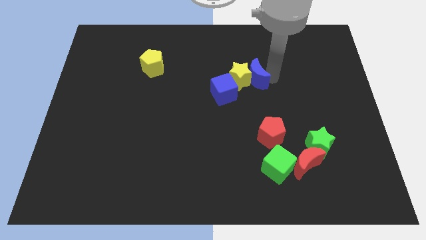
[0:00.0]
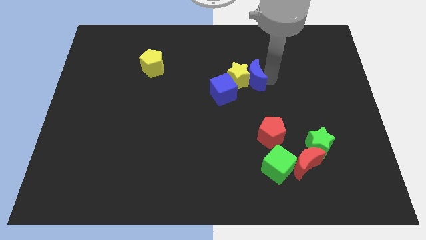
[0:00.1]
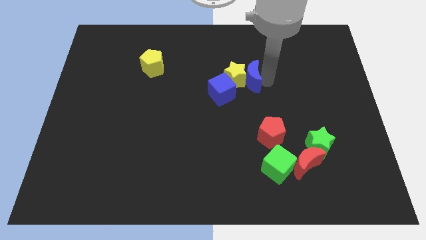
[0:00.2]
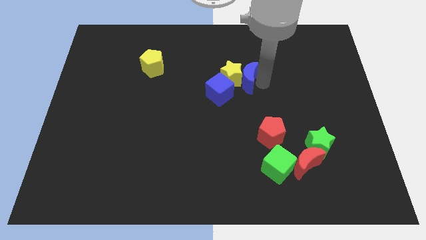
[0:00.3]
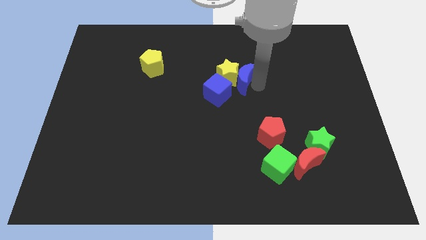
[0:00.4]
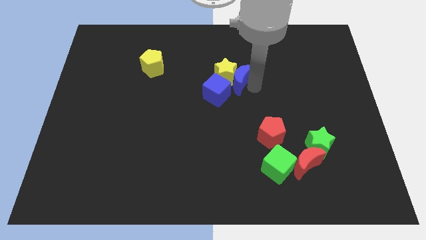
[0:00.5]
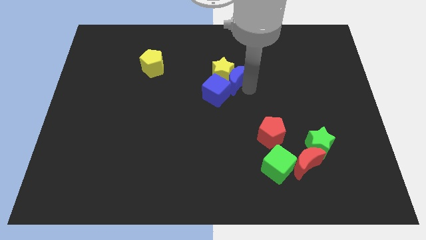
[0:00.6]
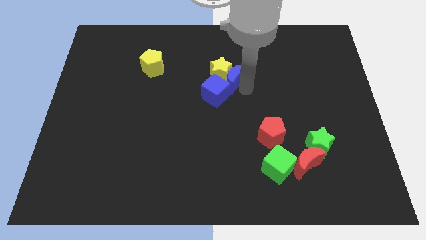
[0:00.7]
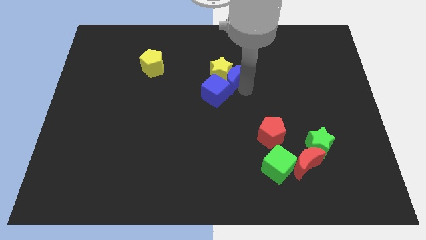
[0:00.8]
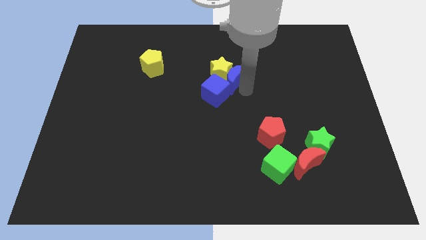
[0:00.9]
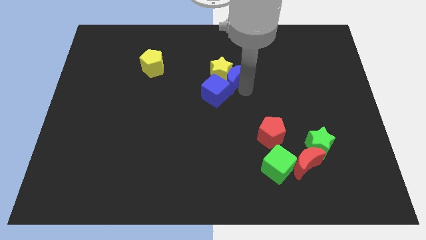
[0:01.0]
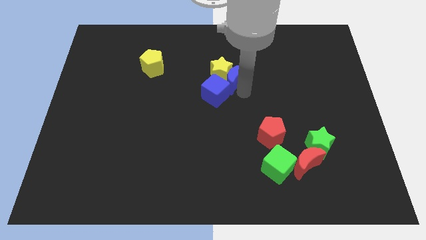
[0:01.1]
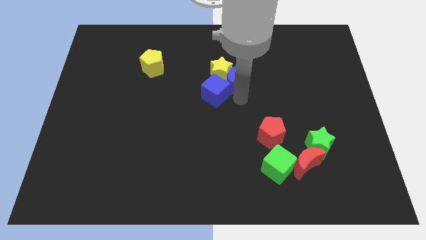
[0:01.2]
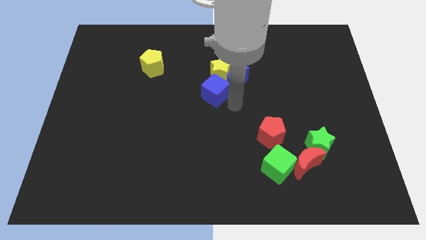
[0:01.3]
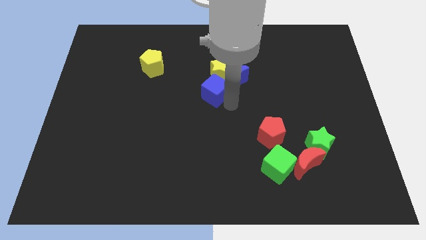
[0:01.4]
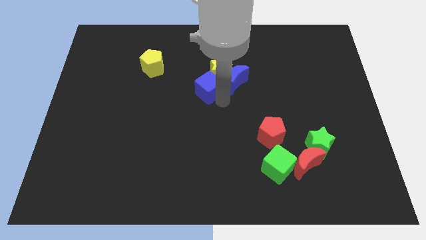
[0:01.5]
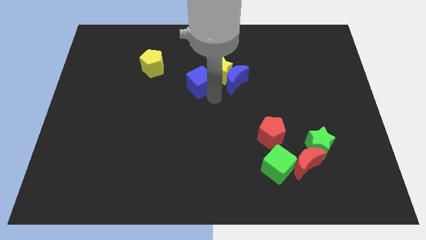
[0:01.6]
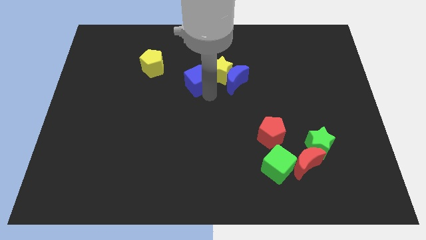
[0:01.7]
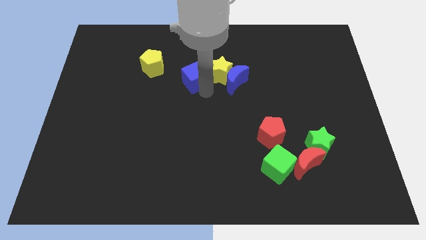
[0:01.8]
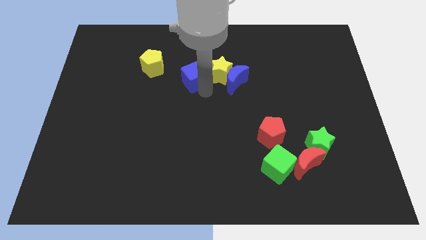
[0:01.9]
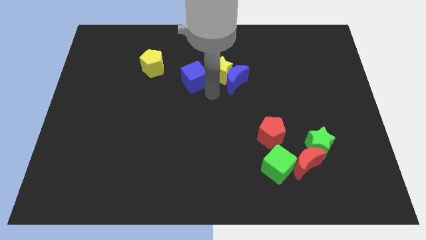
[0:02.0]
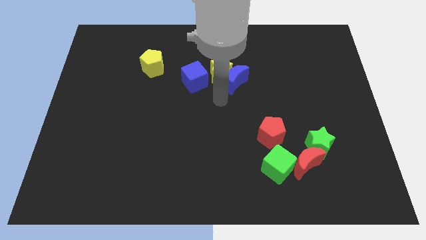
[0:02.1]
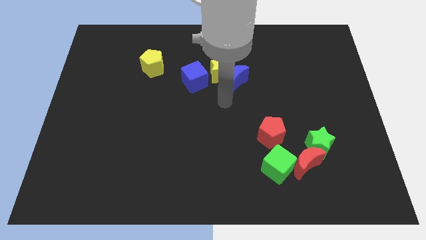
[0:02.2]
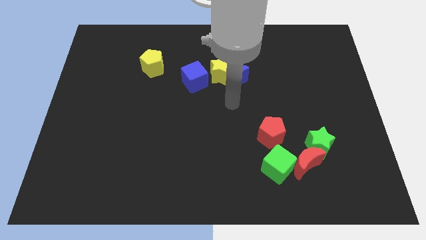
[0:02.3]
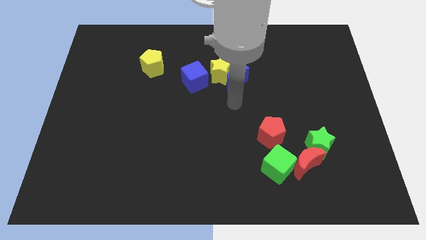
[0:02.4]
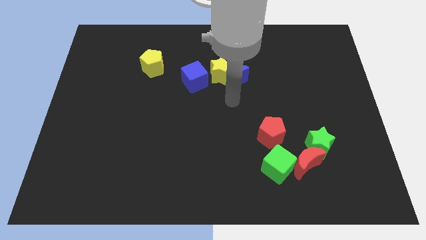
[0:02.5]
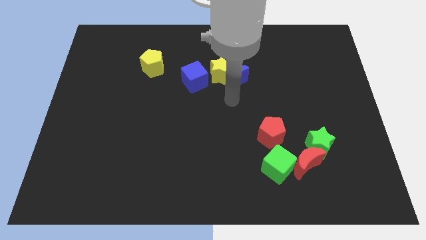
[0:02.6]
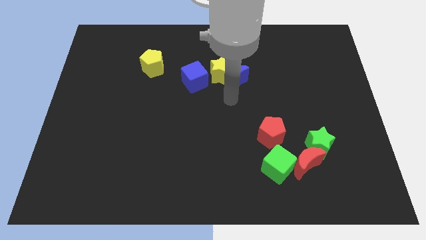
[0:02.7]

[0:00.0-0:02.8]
push the blue crescent into the blue cube and yellow star from the right side

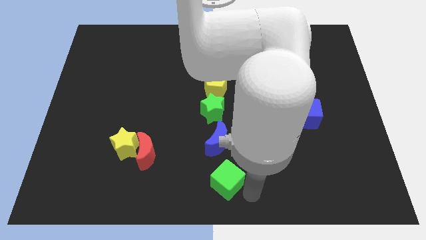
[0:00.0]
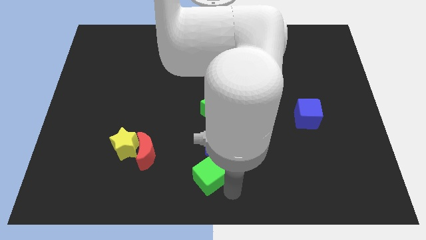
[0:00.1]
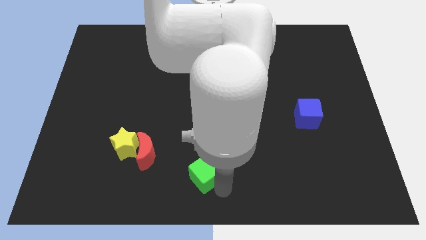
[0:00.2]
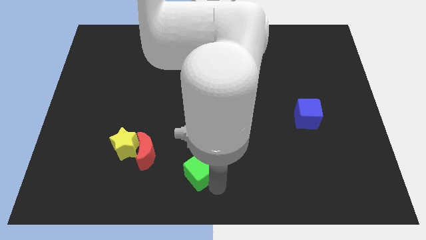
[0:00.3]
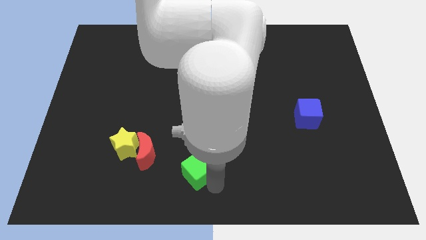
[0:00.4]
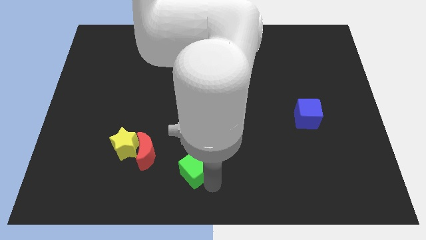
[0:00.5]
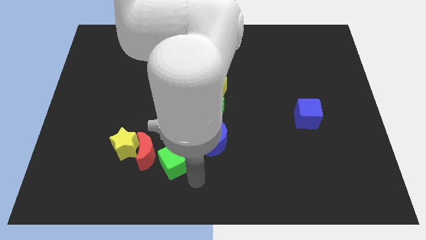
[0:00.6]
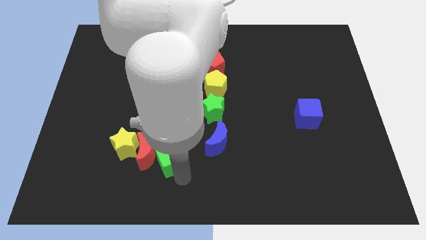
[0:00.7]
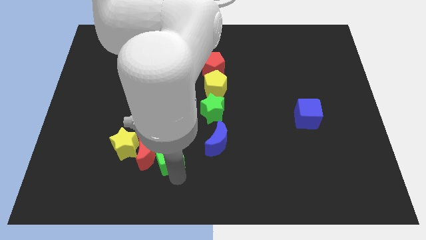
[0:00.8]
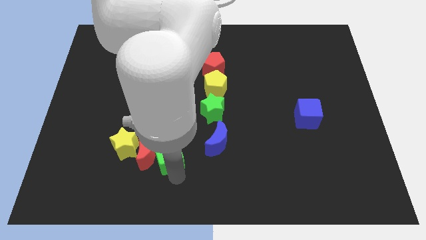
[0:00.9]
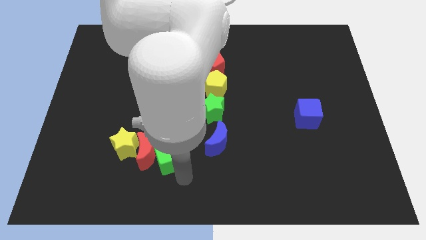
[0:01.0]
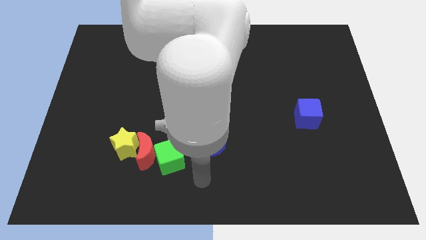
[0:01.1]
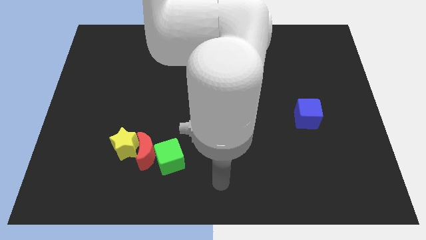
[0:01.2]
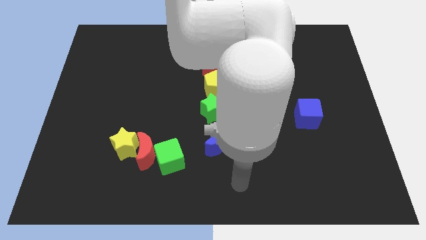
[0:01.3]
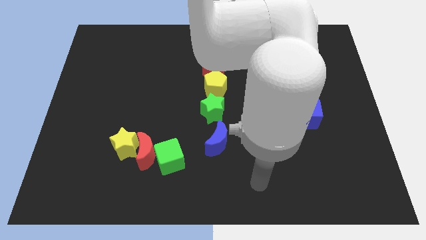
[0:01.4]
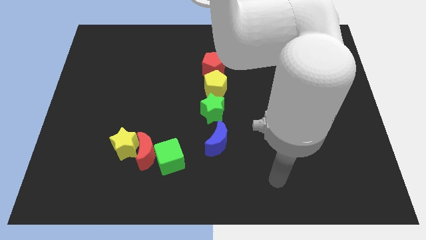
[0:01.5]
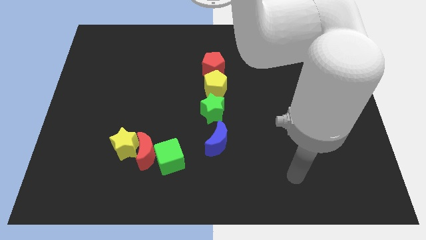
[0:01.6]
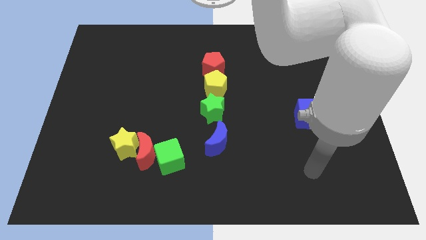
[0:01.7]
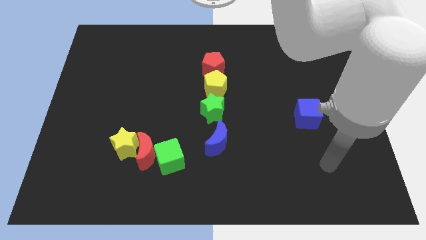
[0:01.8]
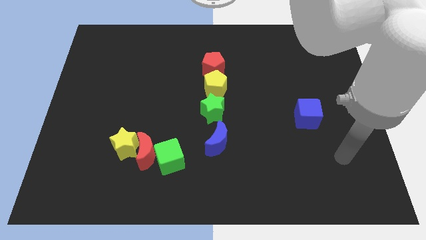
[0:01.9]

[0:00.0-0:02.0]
push the green cube diagonally bottom left to the blue moon

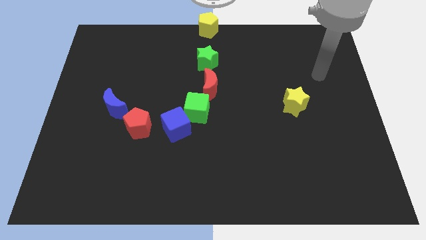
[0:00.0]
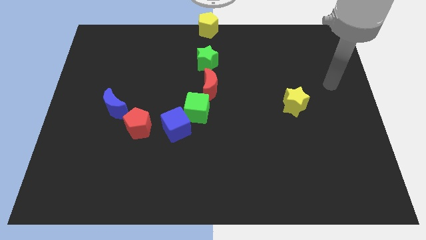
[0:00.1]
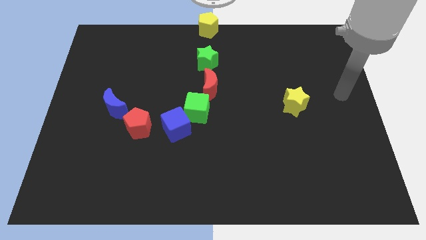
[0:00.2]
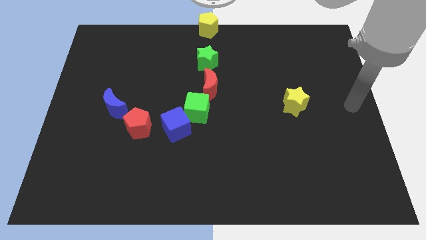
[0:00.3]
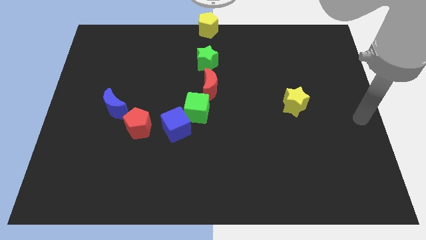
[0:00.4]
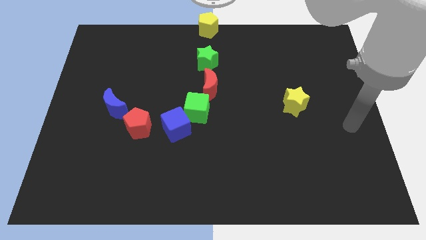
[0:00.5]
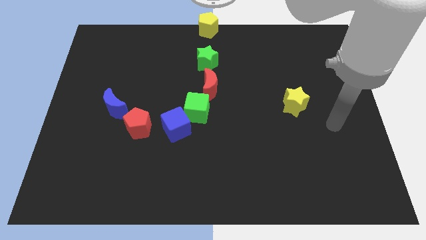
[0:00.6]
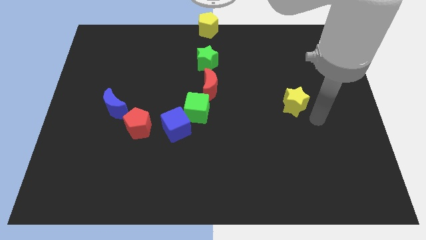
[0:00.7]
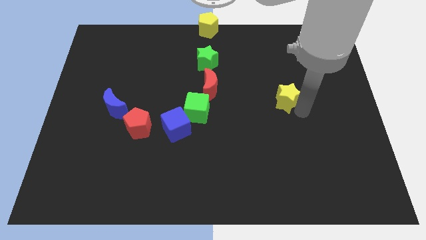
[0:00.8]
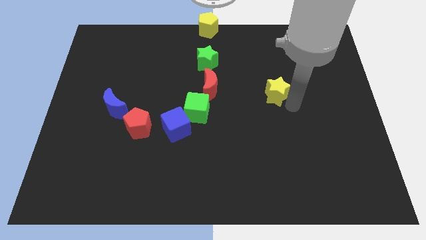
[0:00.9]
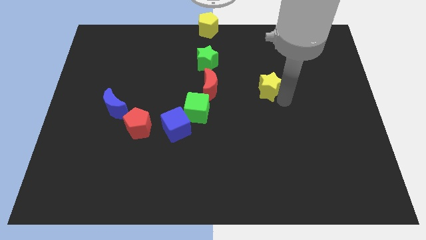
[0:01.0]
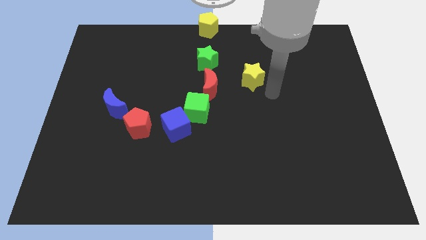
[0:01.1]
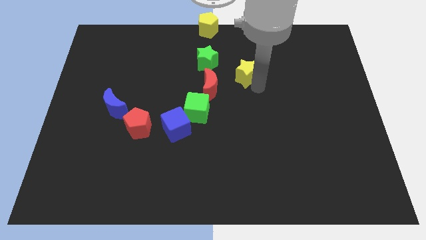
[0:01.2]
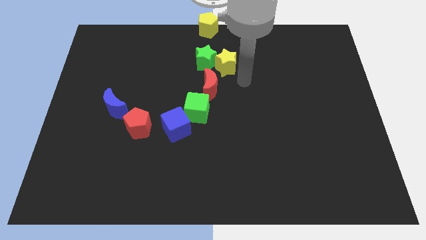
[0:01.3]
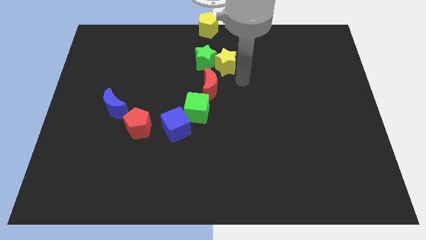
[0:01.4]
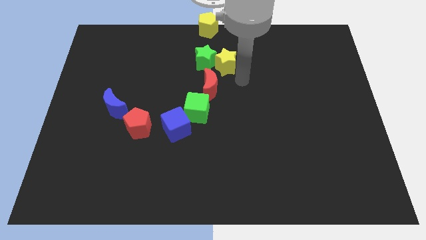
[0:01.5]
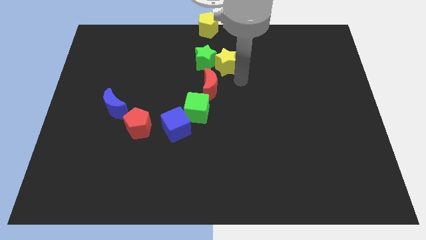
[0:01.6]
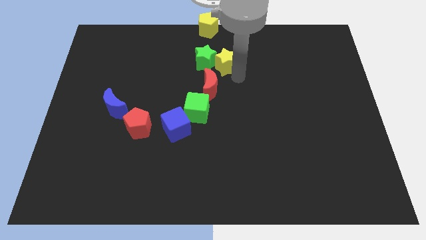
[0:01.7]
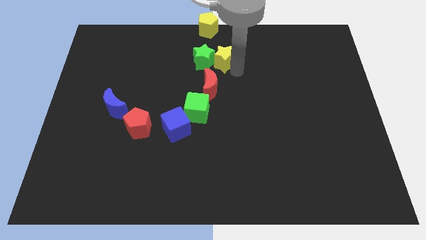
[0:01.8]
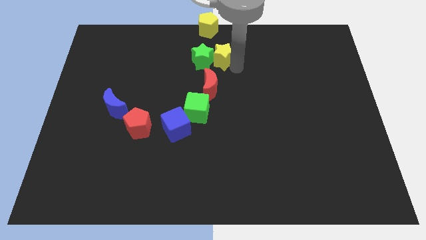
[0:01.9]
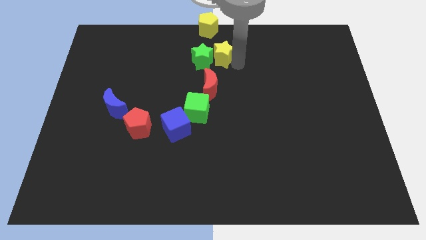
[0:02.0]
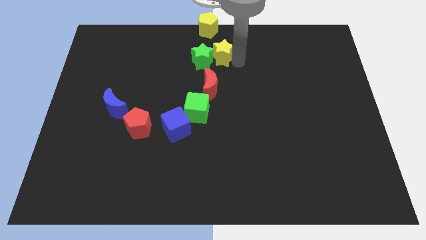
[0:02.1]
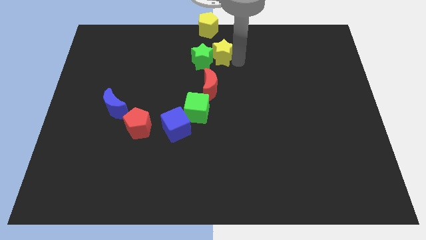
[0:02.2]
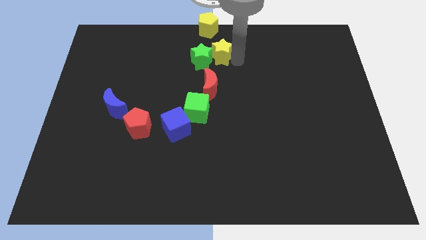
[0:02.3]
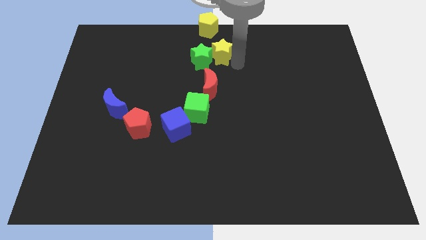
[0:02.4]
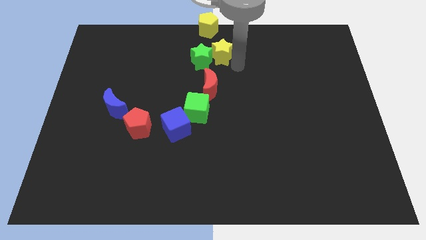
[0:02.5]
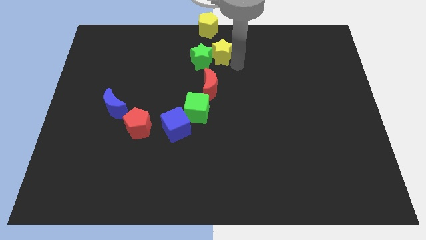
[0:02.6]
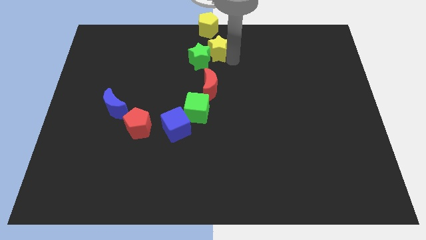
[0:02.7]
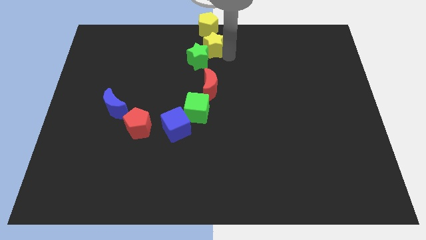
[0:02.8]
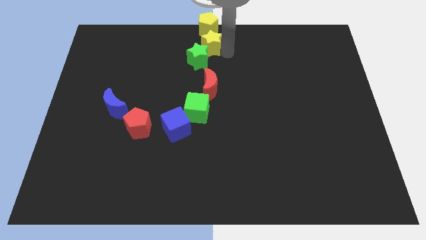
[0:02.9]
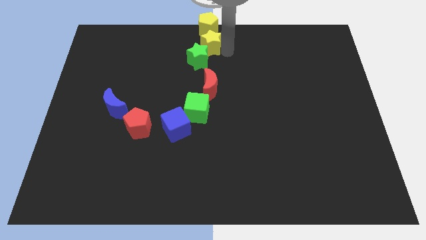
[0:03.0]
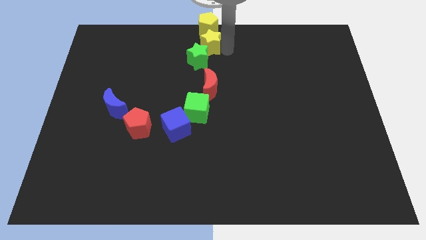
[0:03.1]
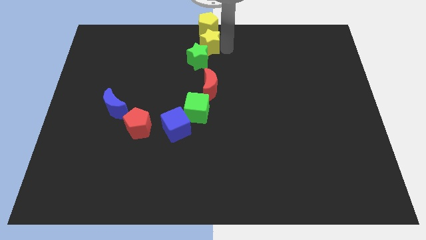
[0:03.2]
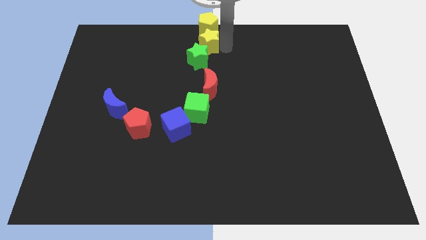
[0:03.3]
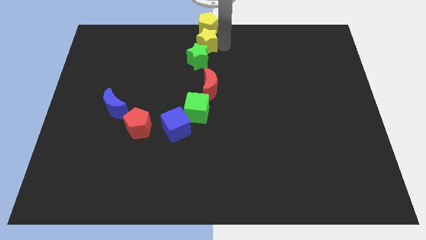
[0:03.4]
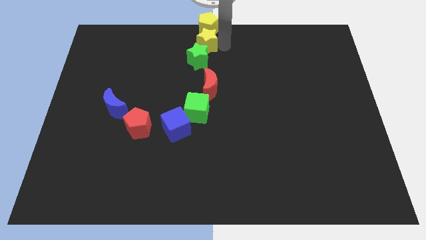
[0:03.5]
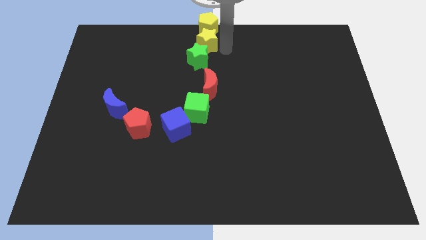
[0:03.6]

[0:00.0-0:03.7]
push the yellow star below the yellow pentagon

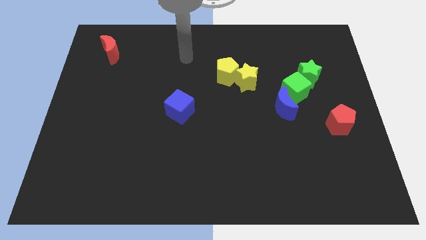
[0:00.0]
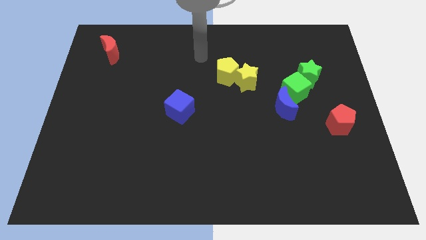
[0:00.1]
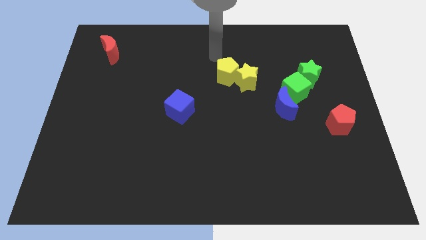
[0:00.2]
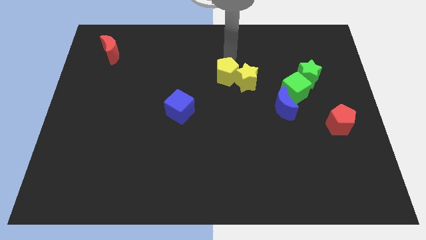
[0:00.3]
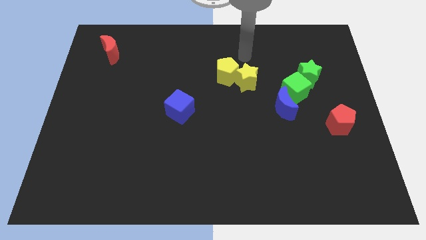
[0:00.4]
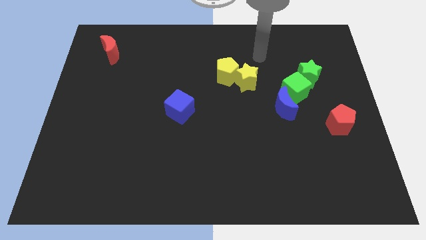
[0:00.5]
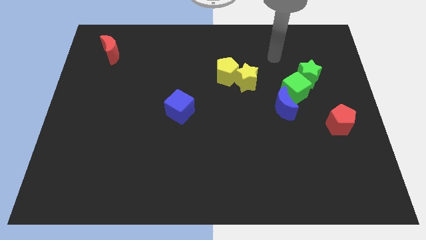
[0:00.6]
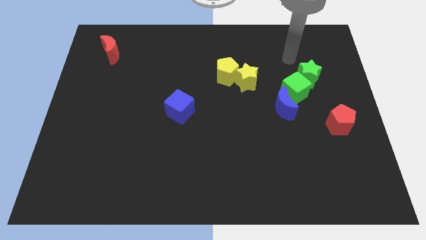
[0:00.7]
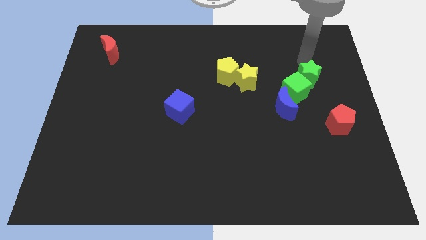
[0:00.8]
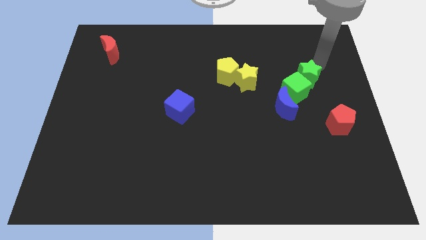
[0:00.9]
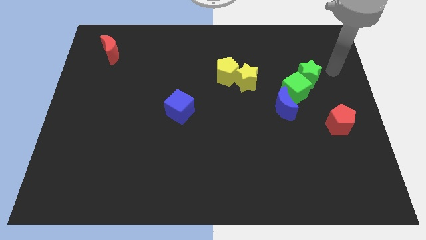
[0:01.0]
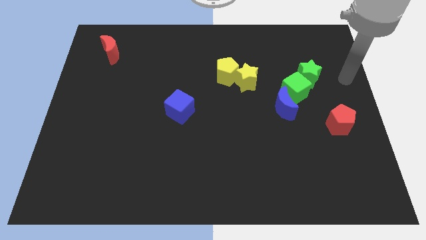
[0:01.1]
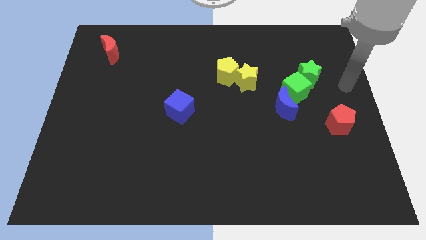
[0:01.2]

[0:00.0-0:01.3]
move the arm towards green star
